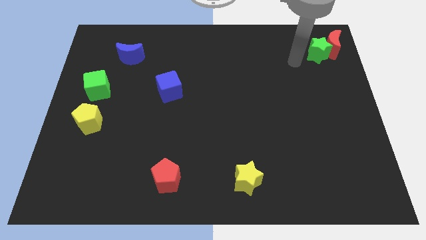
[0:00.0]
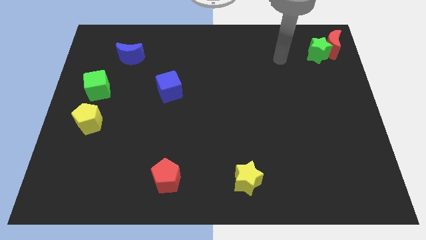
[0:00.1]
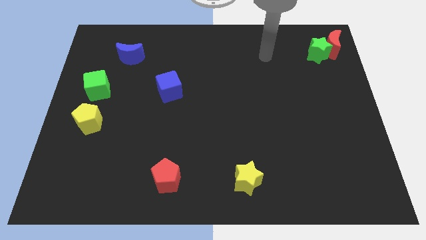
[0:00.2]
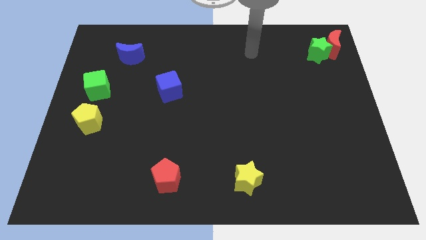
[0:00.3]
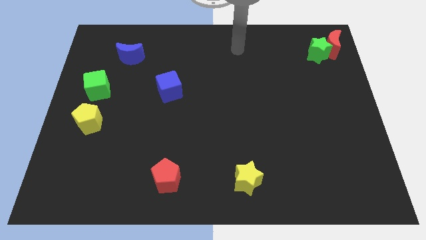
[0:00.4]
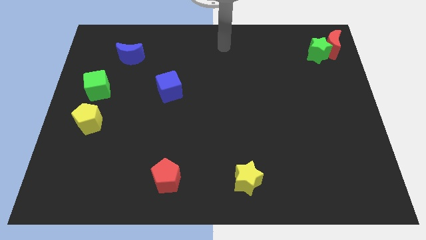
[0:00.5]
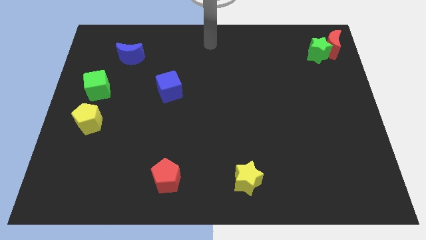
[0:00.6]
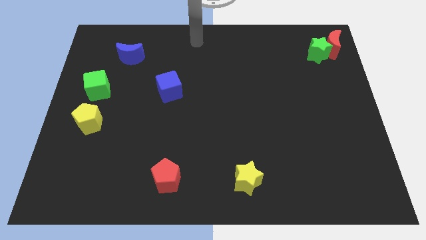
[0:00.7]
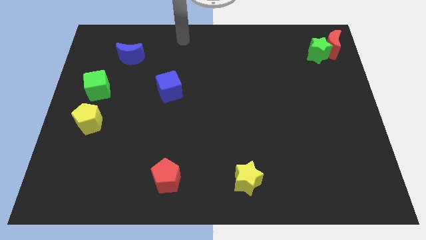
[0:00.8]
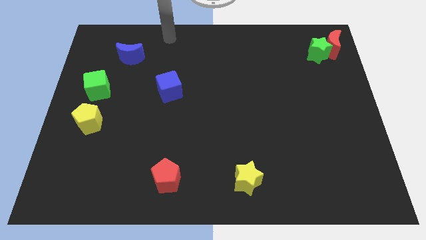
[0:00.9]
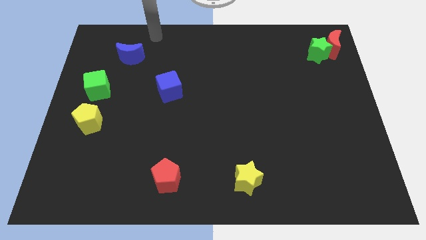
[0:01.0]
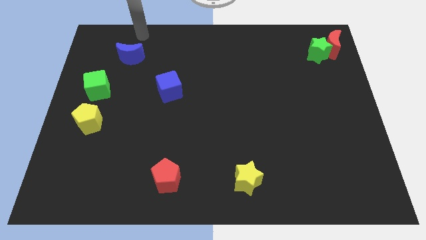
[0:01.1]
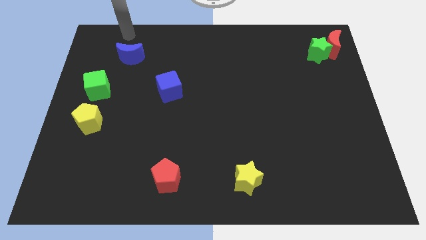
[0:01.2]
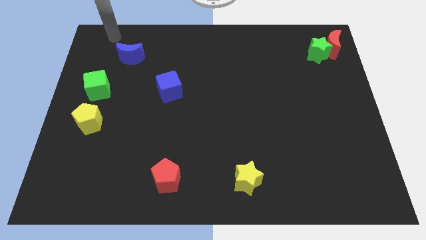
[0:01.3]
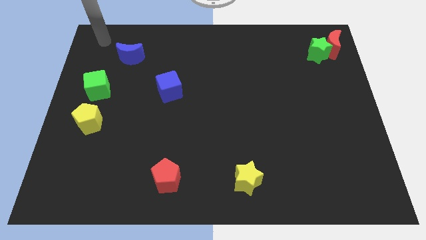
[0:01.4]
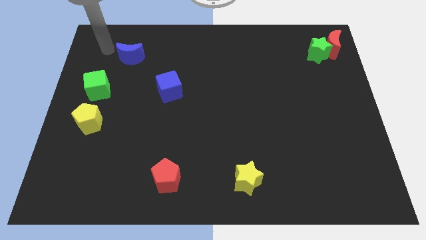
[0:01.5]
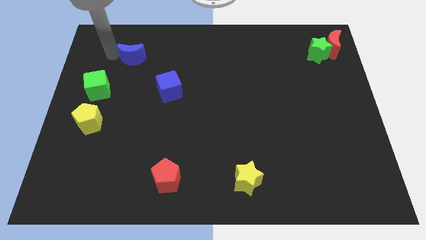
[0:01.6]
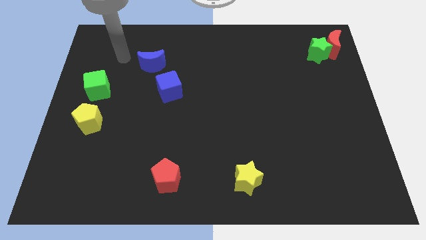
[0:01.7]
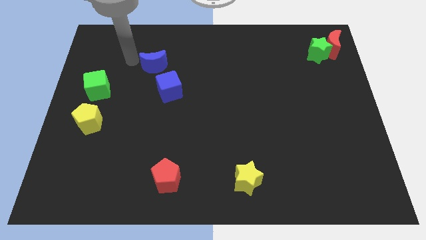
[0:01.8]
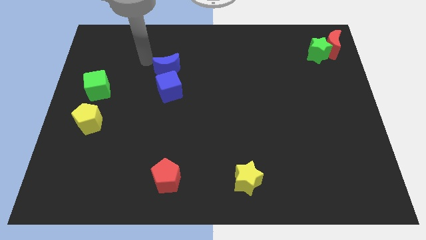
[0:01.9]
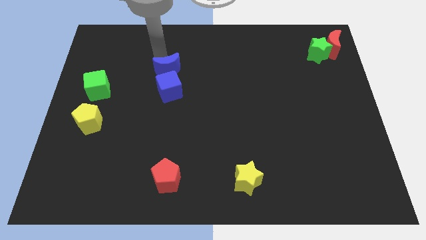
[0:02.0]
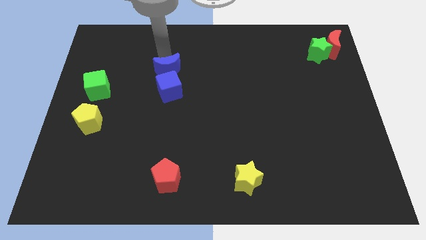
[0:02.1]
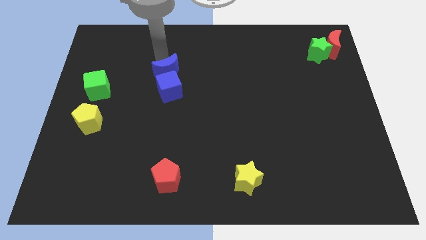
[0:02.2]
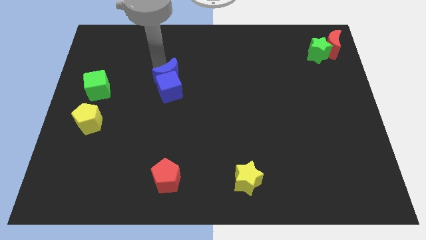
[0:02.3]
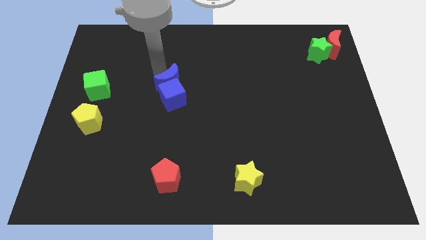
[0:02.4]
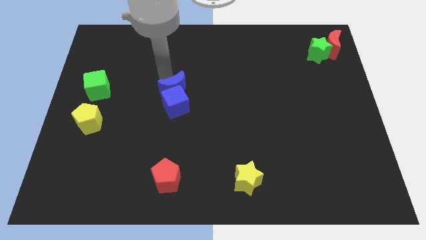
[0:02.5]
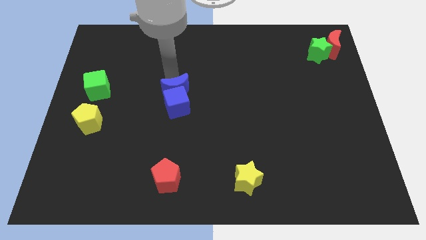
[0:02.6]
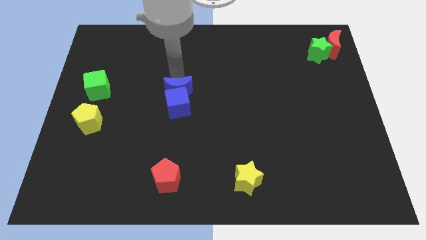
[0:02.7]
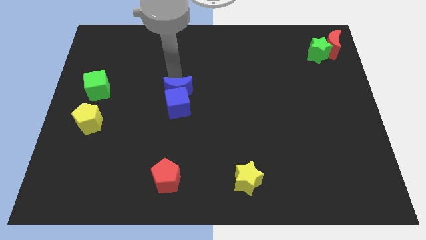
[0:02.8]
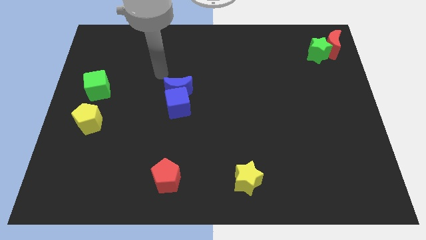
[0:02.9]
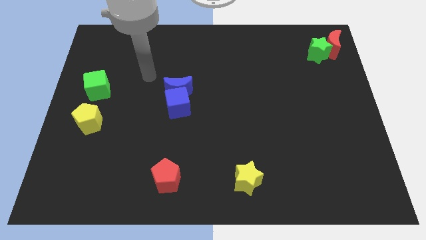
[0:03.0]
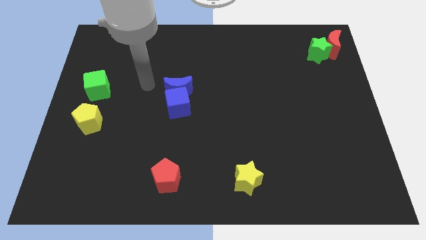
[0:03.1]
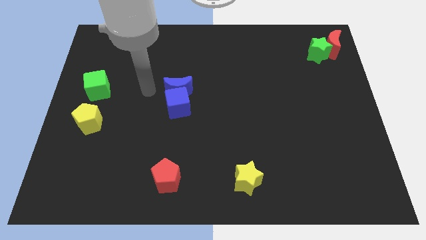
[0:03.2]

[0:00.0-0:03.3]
place the blue crescent above the blue cube

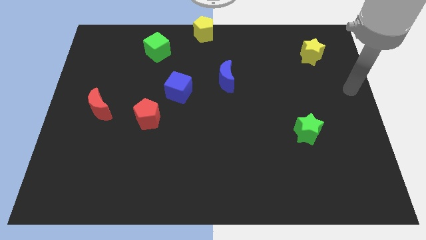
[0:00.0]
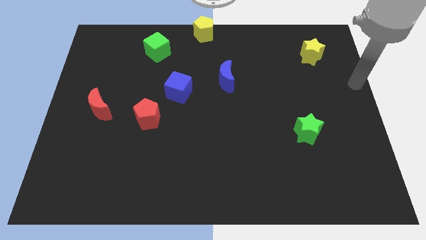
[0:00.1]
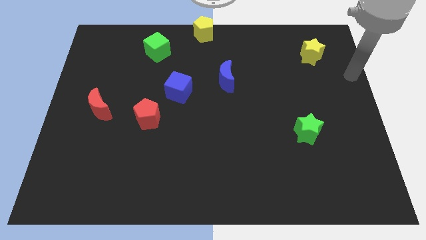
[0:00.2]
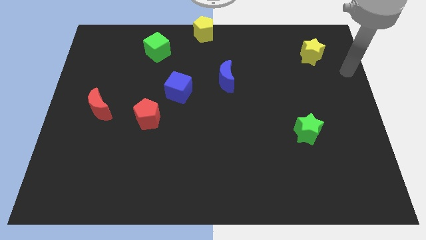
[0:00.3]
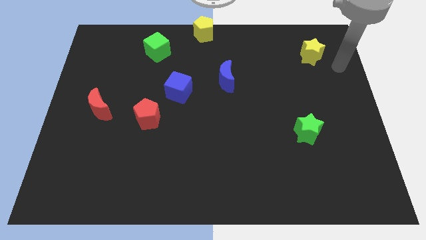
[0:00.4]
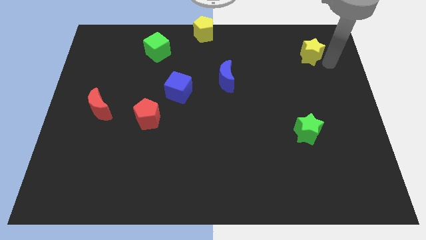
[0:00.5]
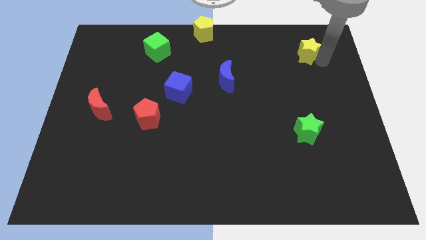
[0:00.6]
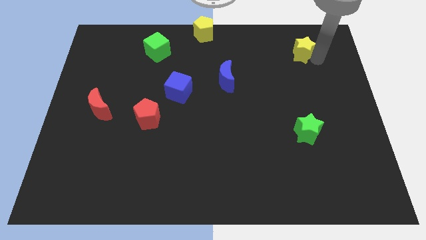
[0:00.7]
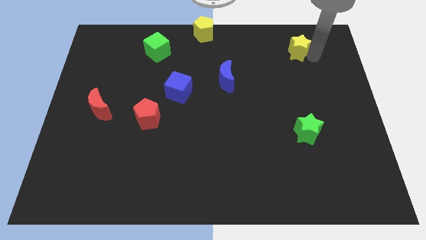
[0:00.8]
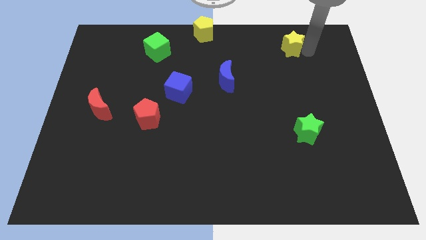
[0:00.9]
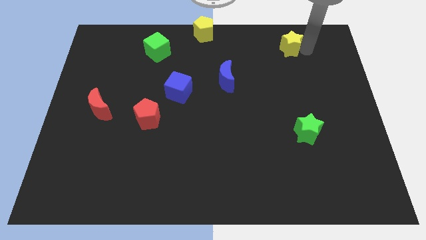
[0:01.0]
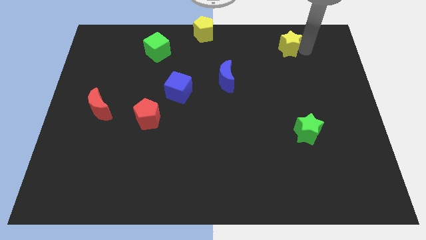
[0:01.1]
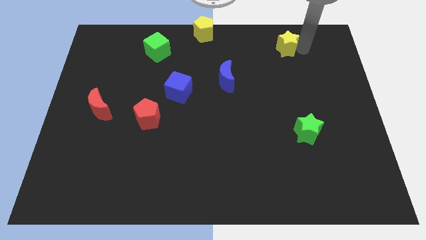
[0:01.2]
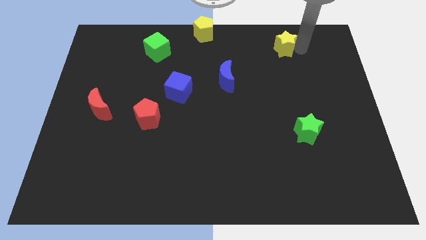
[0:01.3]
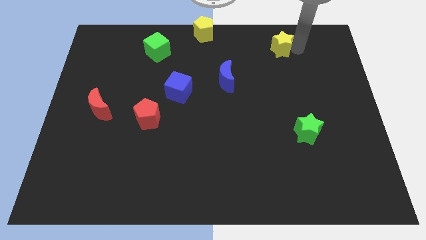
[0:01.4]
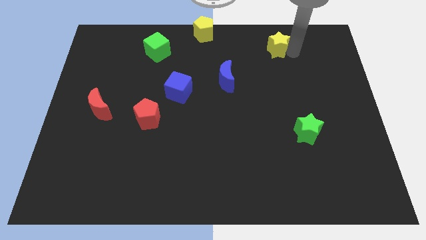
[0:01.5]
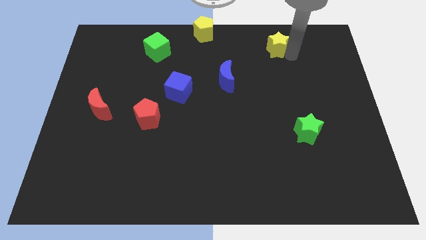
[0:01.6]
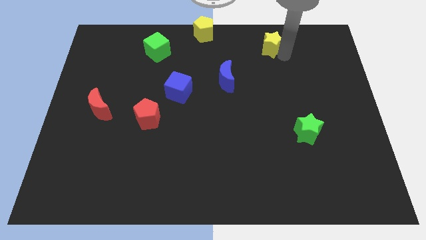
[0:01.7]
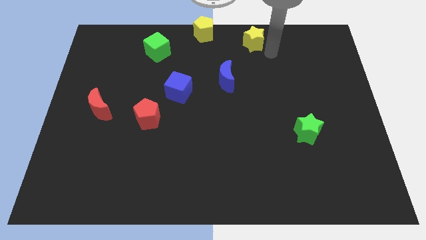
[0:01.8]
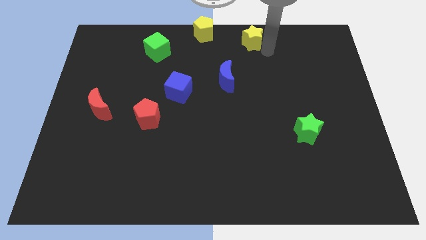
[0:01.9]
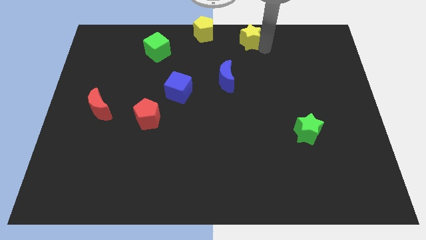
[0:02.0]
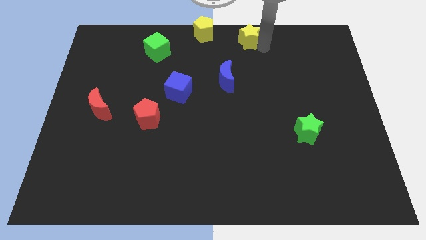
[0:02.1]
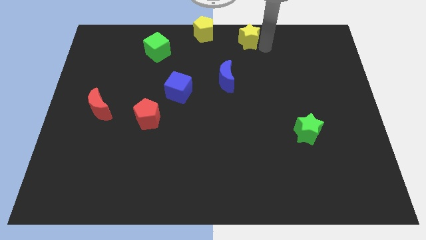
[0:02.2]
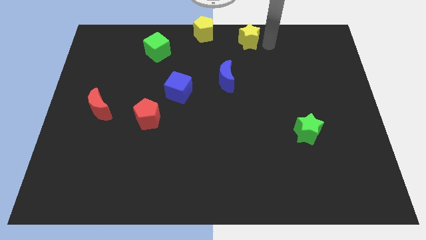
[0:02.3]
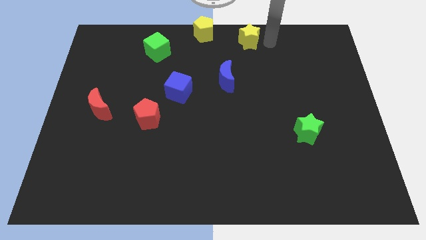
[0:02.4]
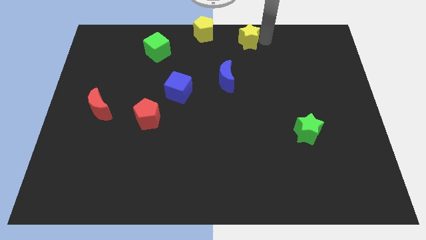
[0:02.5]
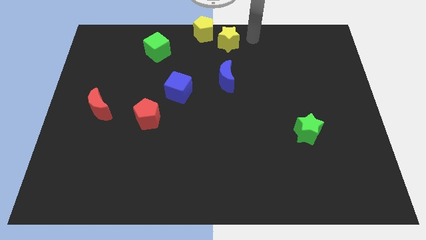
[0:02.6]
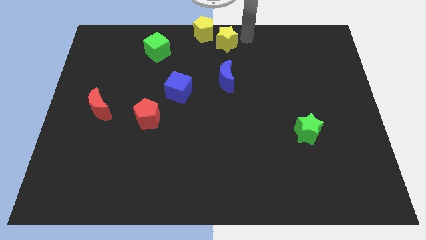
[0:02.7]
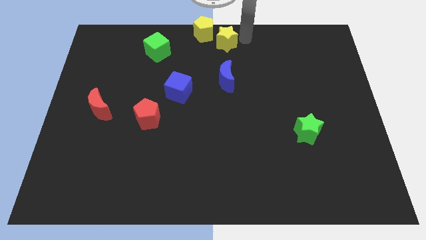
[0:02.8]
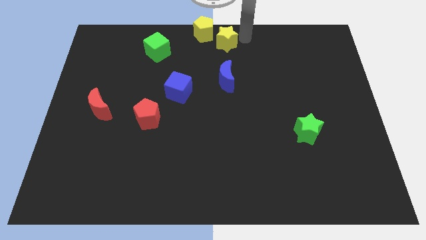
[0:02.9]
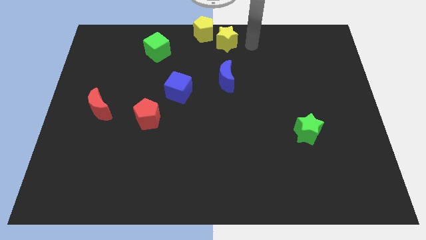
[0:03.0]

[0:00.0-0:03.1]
push yellow star towards yellow pentagon

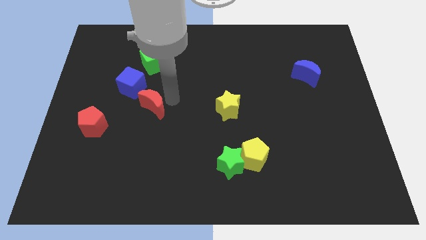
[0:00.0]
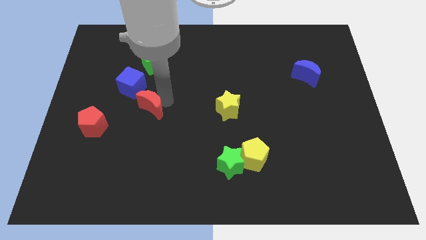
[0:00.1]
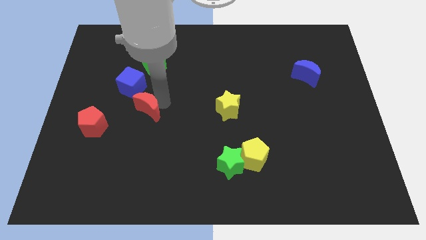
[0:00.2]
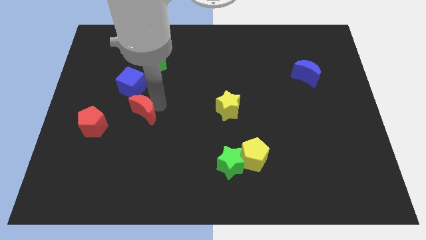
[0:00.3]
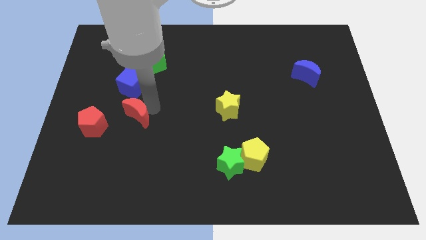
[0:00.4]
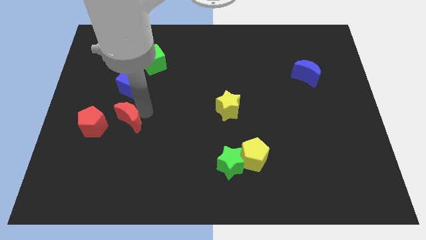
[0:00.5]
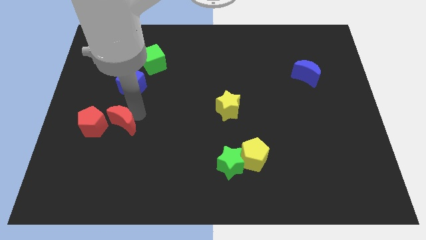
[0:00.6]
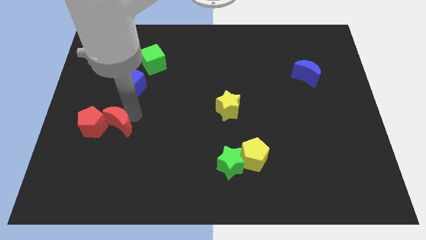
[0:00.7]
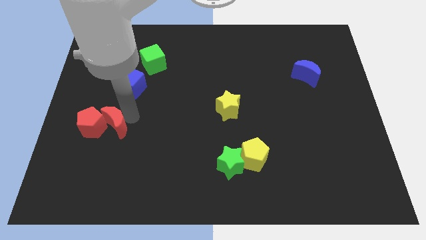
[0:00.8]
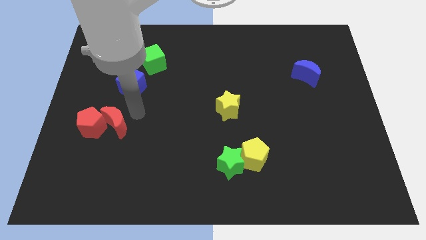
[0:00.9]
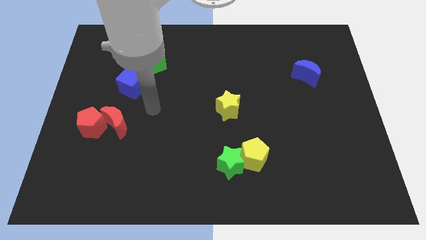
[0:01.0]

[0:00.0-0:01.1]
move the red crescent to the right of the red pentagon

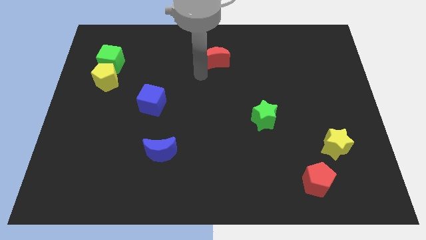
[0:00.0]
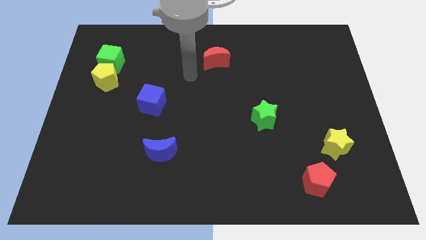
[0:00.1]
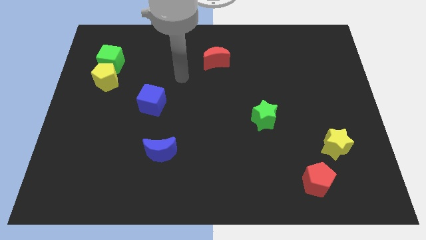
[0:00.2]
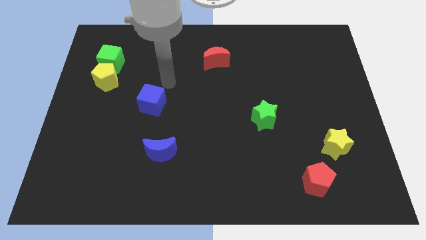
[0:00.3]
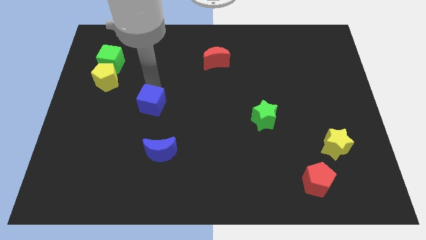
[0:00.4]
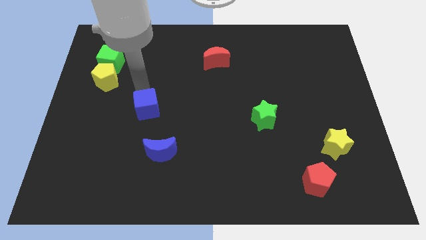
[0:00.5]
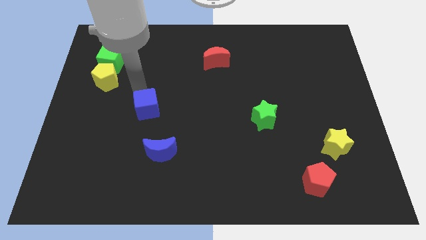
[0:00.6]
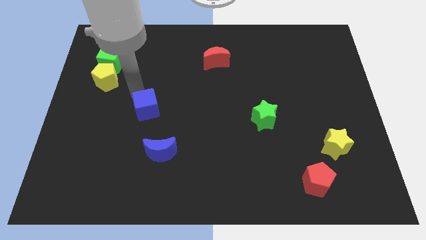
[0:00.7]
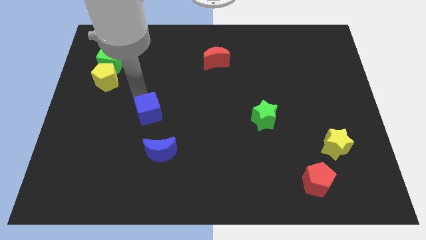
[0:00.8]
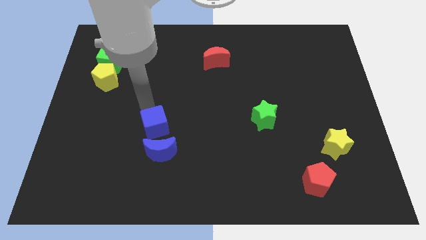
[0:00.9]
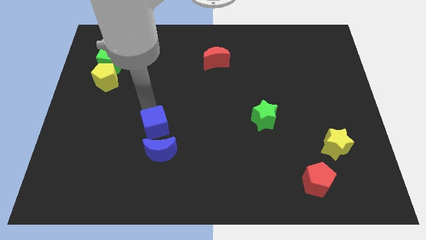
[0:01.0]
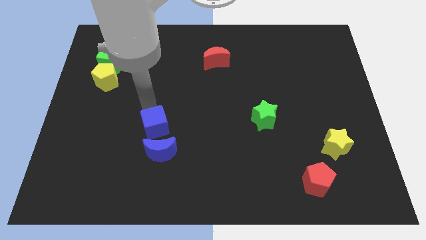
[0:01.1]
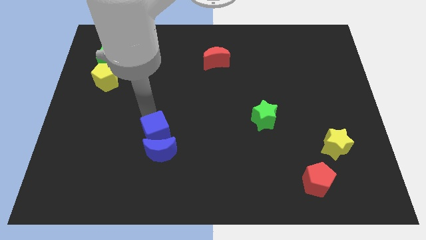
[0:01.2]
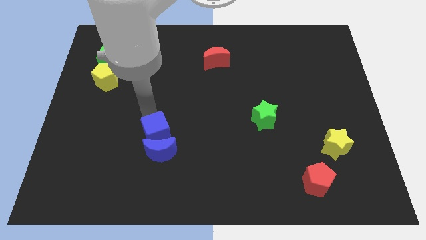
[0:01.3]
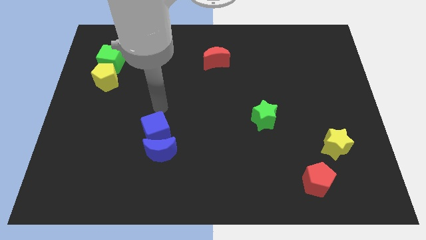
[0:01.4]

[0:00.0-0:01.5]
place the blue cube close to the blue crescent
